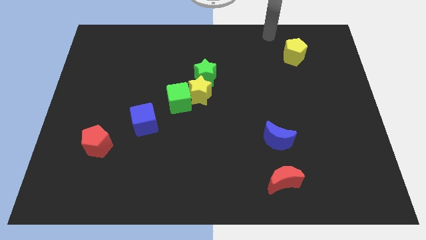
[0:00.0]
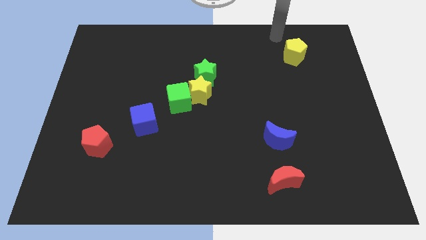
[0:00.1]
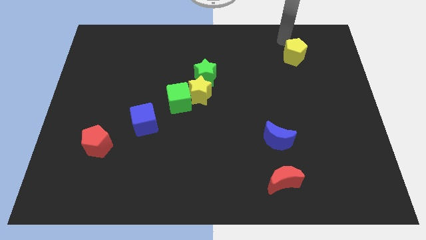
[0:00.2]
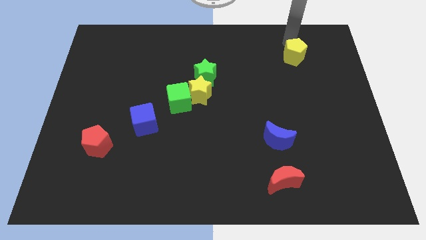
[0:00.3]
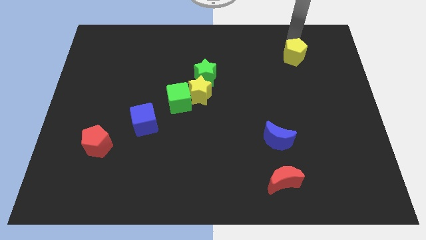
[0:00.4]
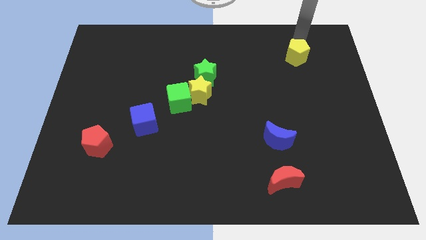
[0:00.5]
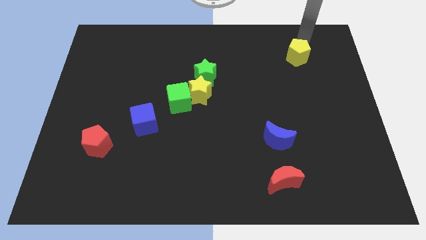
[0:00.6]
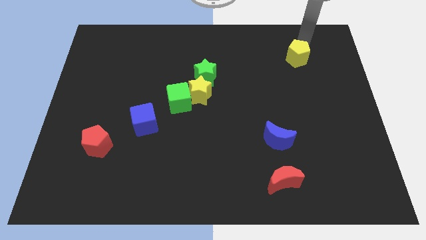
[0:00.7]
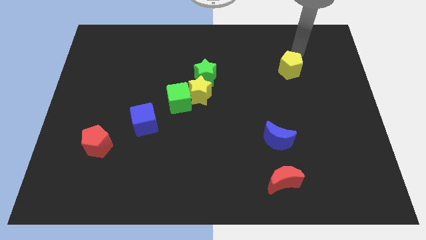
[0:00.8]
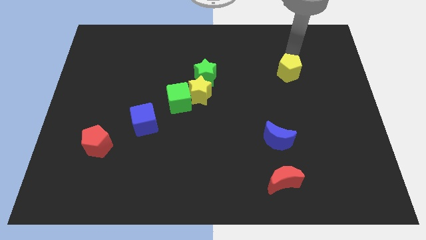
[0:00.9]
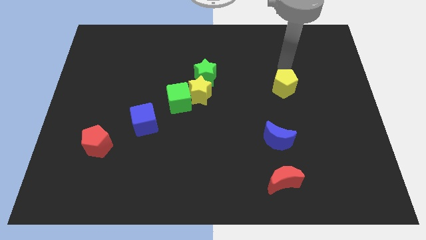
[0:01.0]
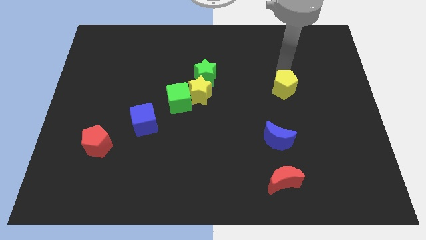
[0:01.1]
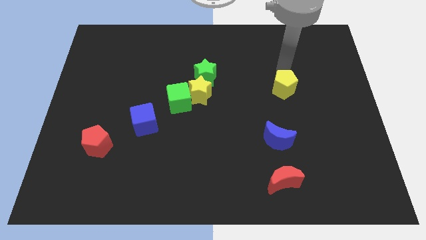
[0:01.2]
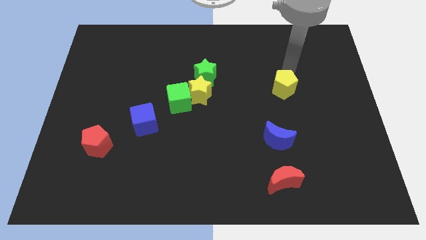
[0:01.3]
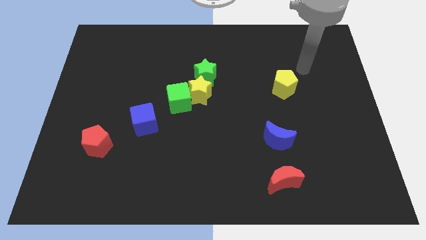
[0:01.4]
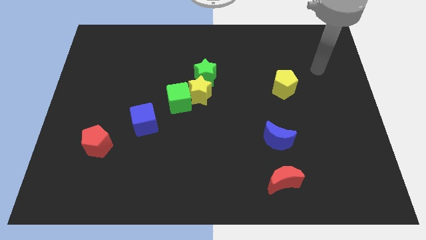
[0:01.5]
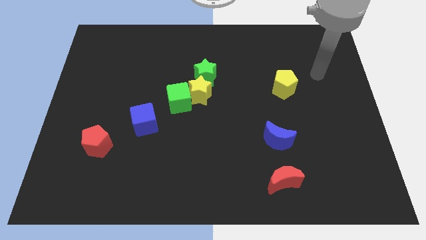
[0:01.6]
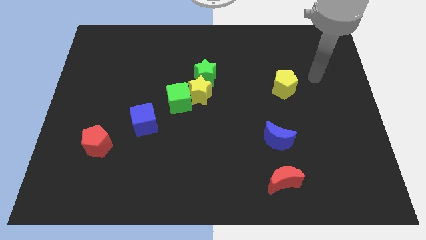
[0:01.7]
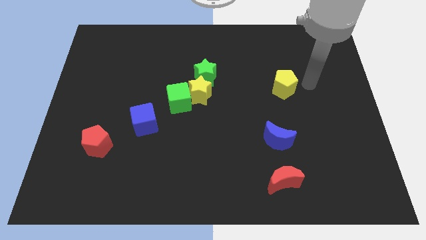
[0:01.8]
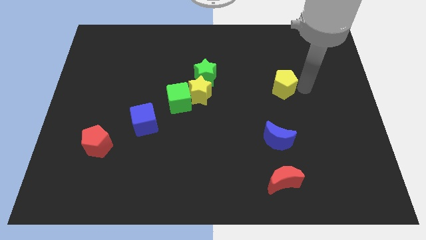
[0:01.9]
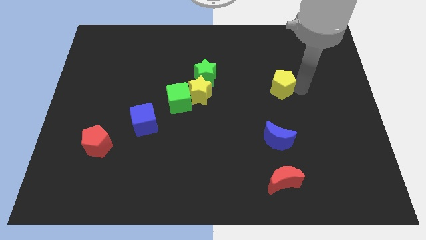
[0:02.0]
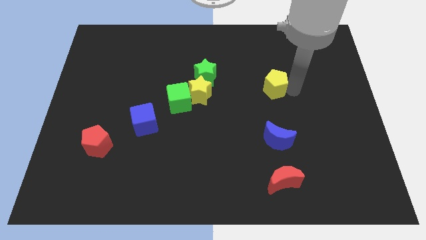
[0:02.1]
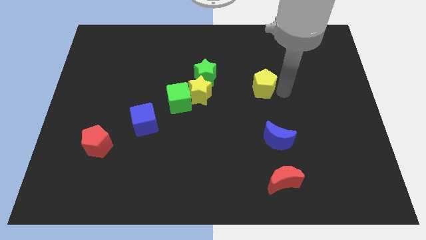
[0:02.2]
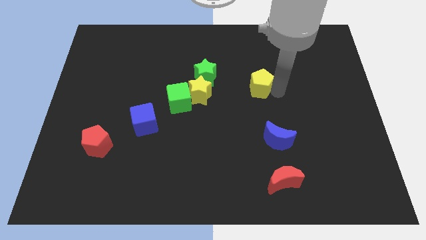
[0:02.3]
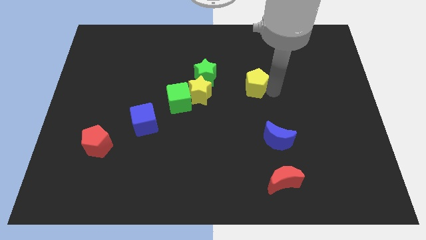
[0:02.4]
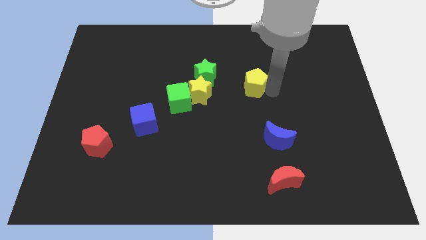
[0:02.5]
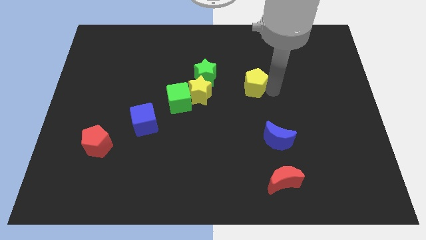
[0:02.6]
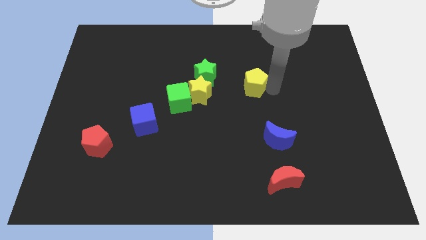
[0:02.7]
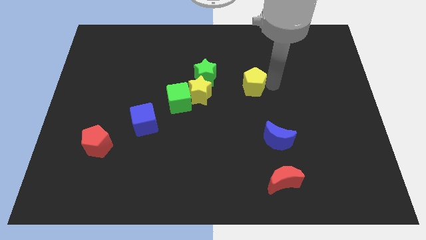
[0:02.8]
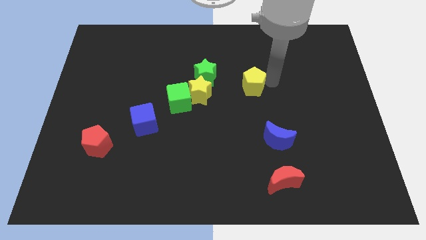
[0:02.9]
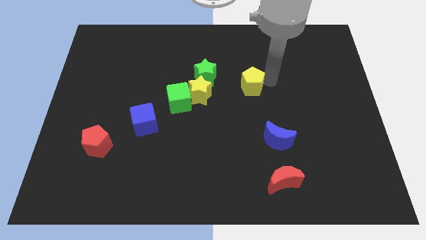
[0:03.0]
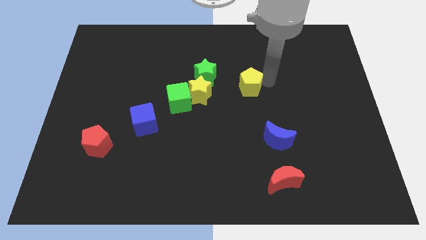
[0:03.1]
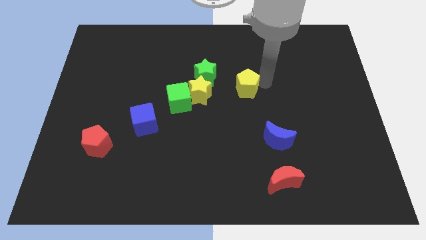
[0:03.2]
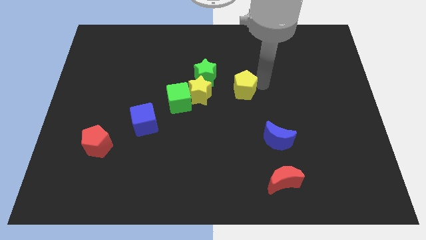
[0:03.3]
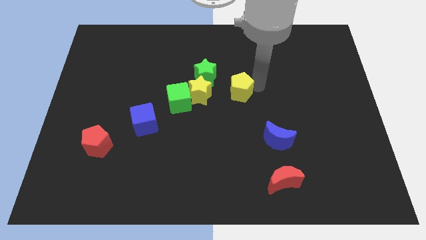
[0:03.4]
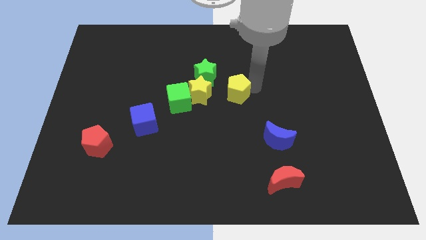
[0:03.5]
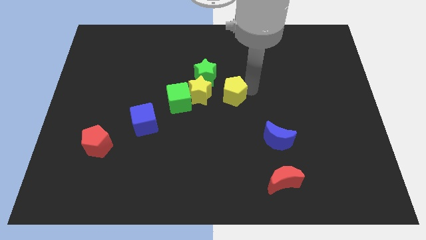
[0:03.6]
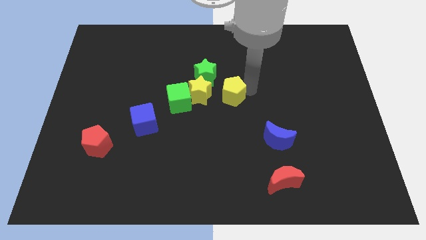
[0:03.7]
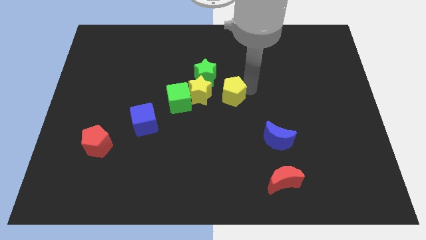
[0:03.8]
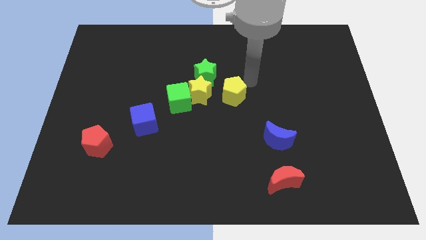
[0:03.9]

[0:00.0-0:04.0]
place the yellow pentagon at the bottom right of the green star

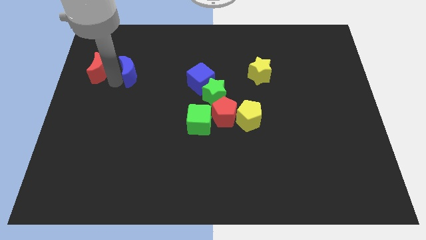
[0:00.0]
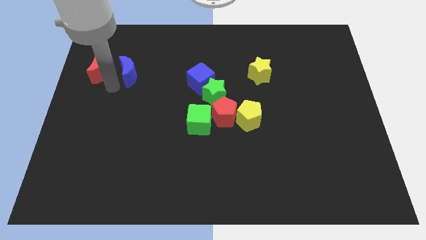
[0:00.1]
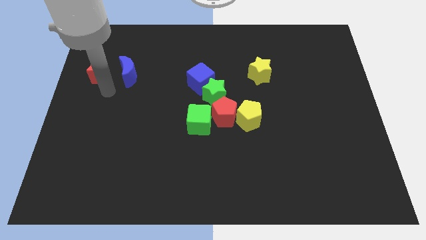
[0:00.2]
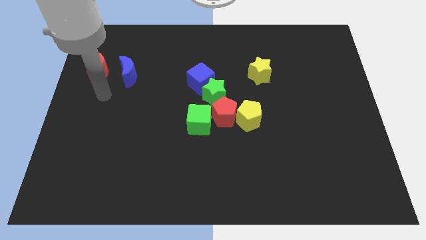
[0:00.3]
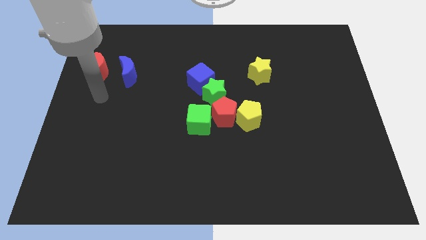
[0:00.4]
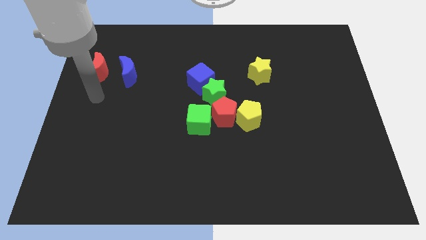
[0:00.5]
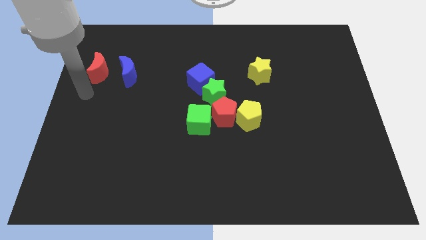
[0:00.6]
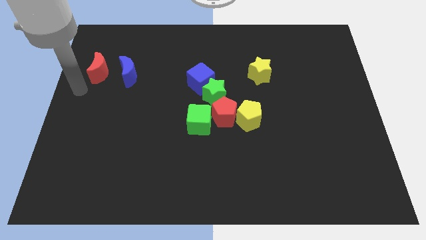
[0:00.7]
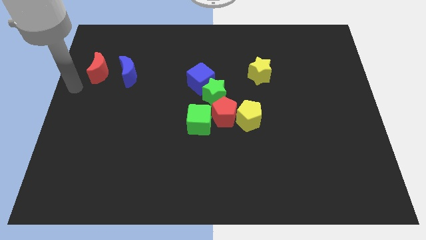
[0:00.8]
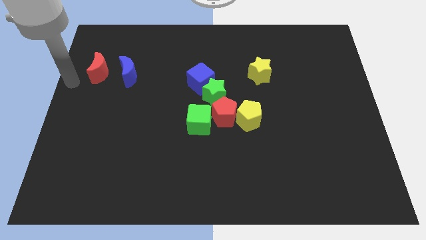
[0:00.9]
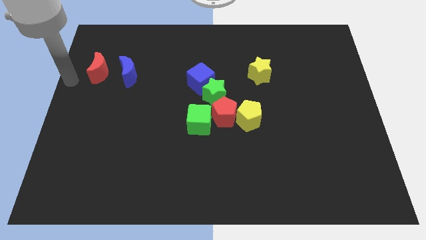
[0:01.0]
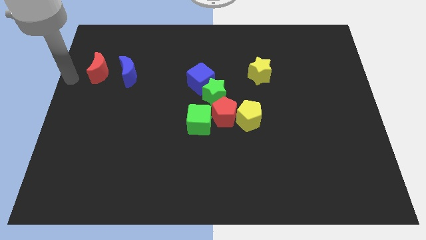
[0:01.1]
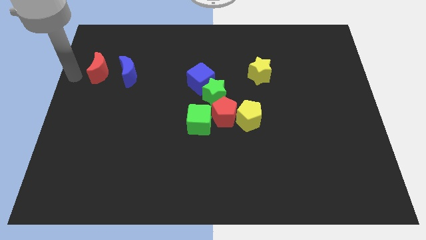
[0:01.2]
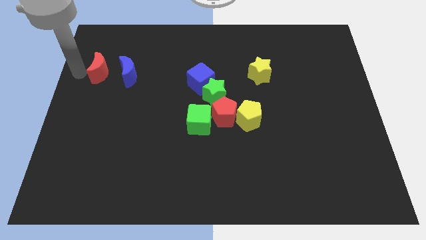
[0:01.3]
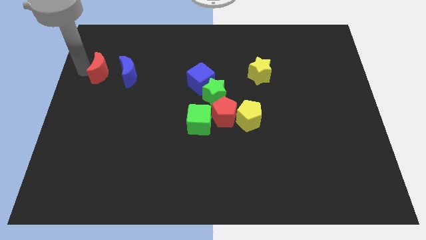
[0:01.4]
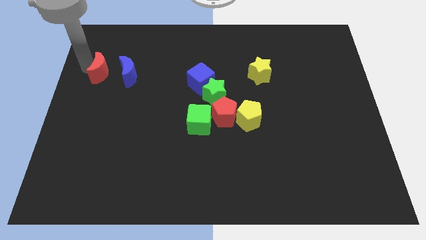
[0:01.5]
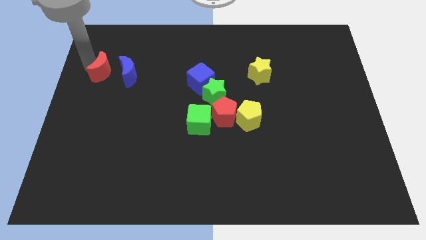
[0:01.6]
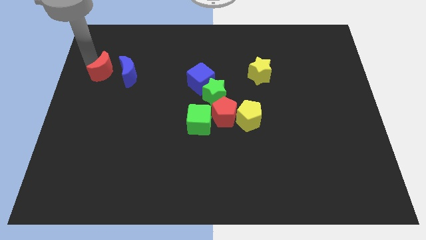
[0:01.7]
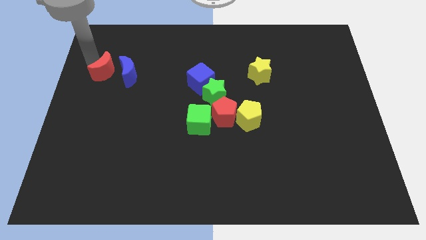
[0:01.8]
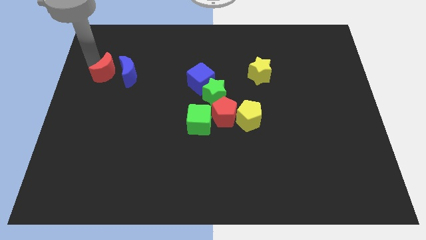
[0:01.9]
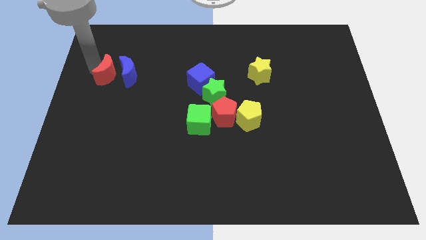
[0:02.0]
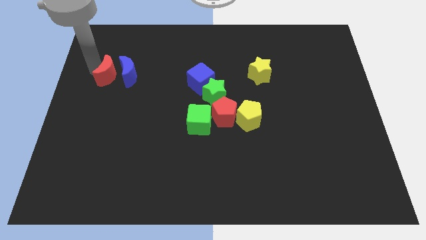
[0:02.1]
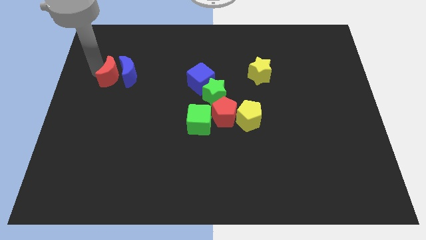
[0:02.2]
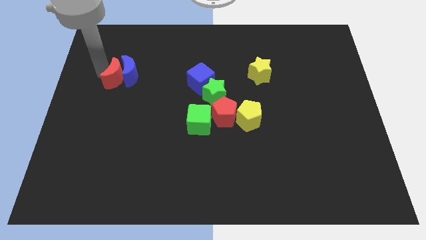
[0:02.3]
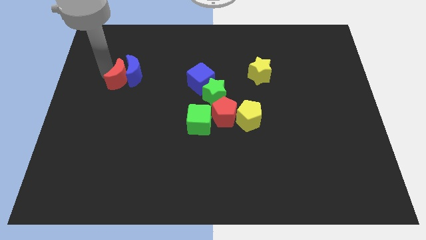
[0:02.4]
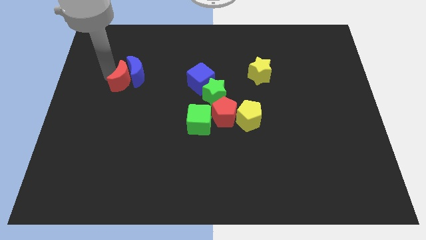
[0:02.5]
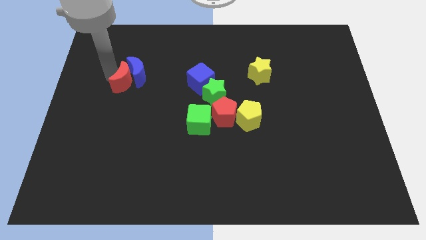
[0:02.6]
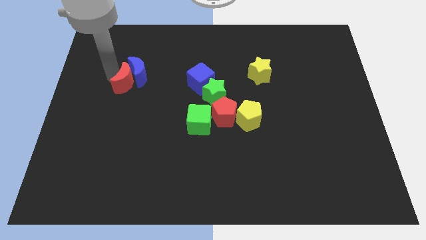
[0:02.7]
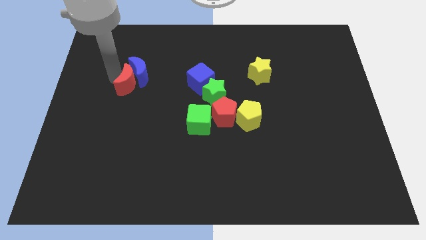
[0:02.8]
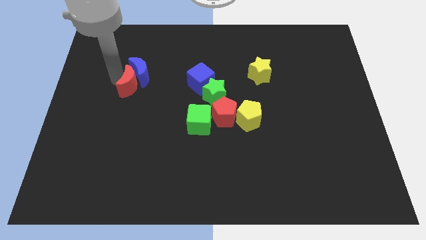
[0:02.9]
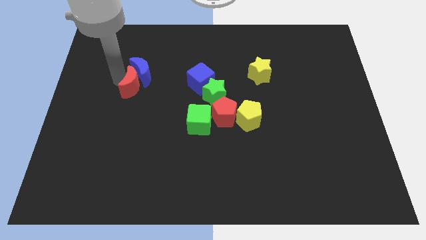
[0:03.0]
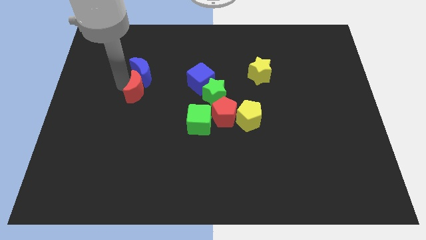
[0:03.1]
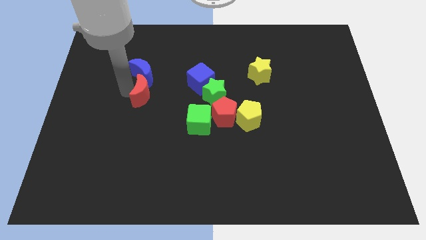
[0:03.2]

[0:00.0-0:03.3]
move both the moons slightly right

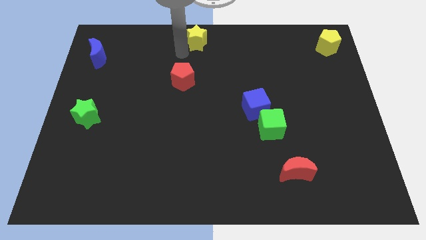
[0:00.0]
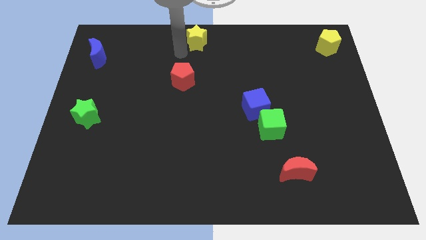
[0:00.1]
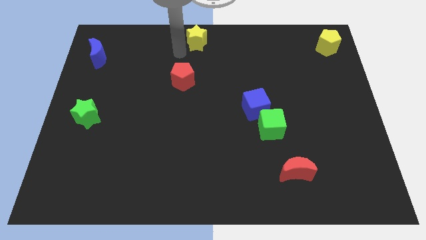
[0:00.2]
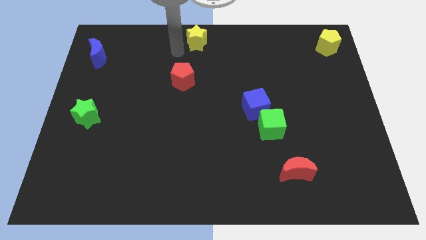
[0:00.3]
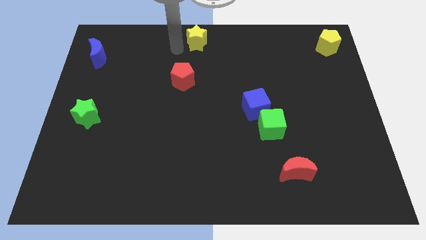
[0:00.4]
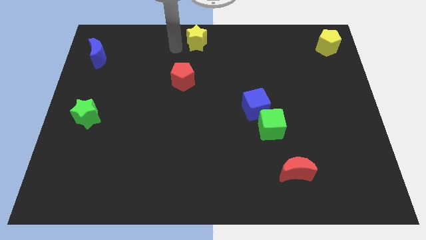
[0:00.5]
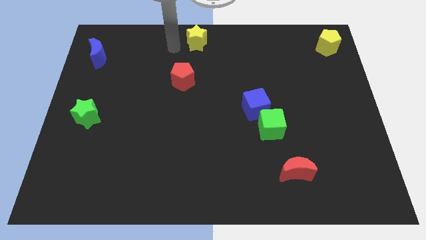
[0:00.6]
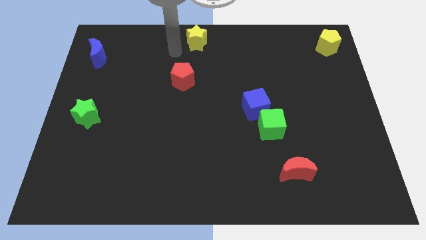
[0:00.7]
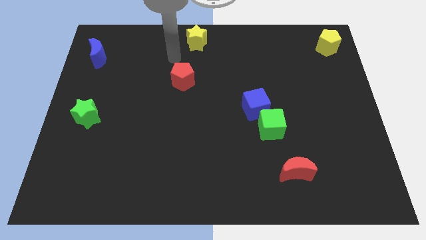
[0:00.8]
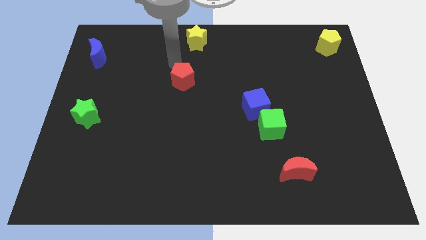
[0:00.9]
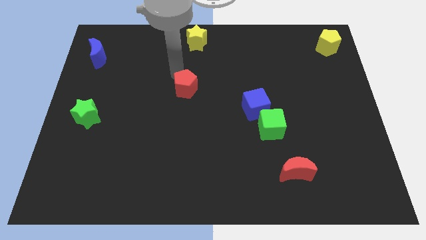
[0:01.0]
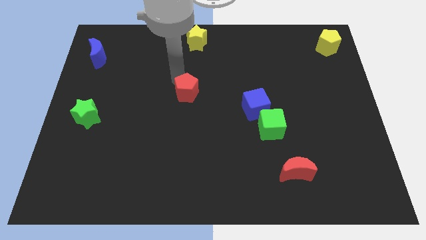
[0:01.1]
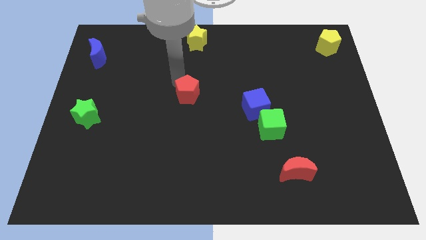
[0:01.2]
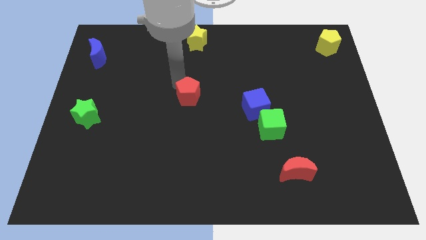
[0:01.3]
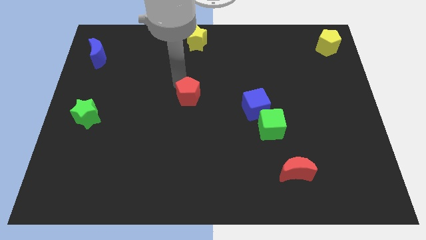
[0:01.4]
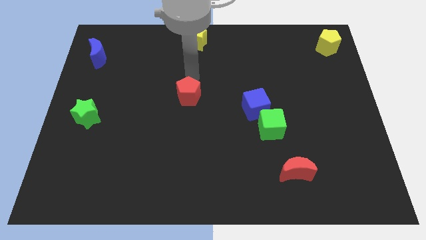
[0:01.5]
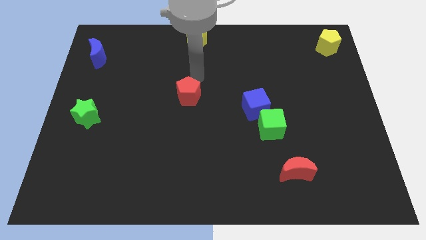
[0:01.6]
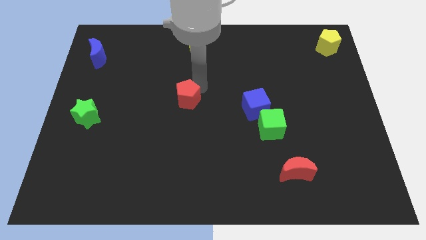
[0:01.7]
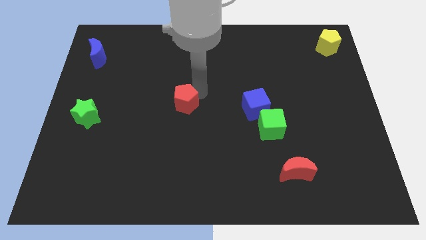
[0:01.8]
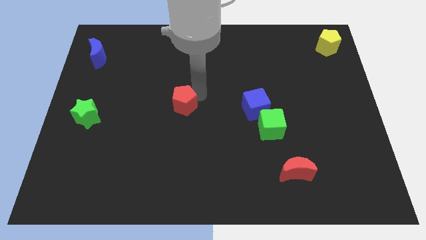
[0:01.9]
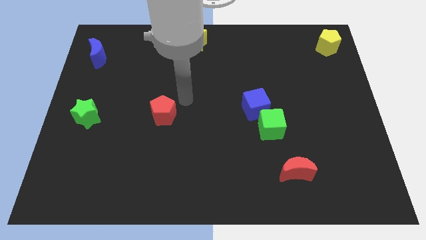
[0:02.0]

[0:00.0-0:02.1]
slide the red pentagon horizontally to the left side of the blue cube
